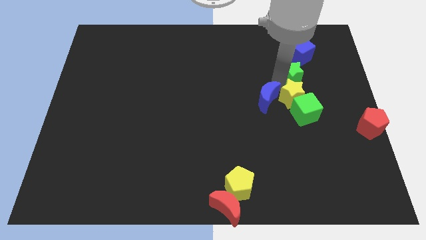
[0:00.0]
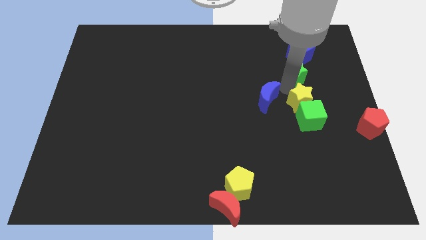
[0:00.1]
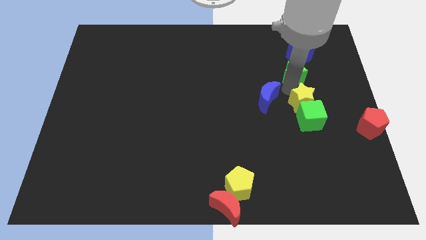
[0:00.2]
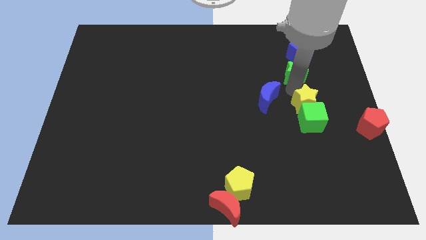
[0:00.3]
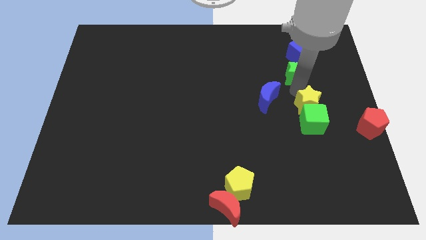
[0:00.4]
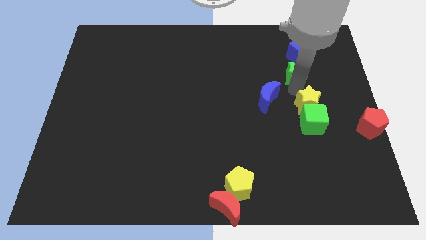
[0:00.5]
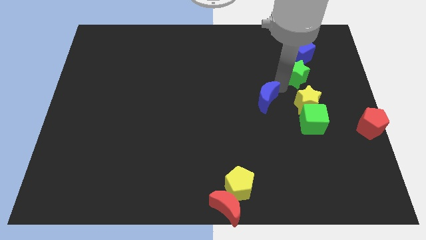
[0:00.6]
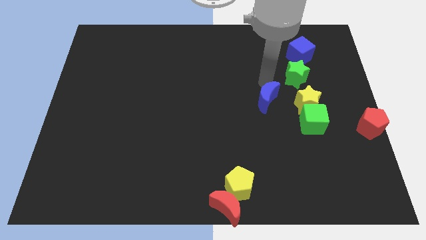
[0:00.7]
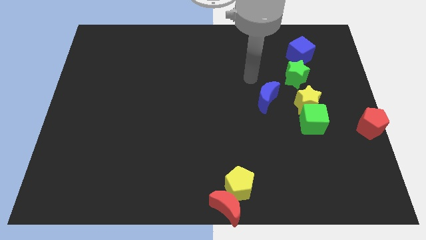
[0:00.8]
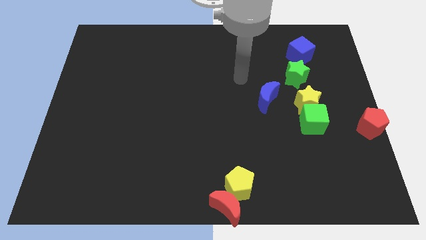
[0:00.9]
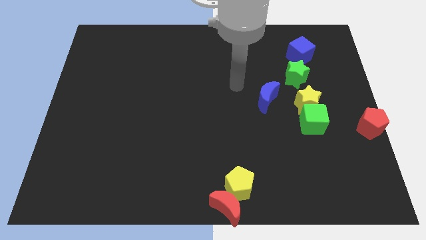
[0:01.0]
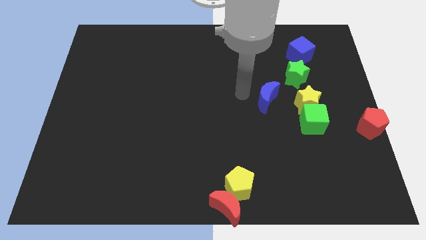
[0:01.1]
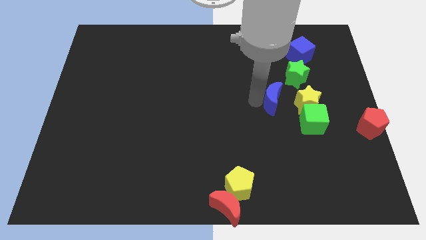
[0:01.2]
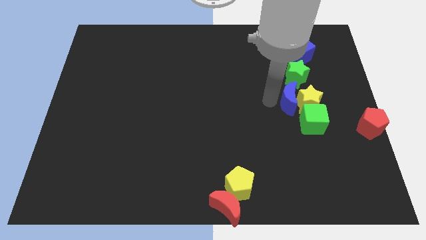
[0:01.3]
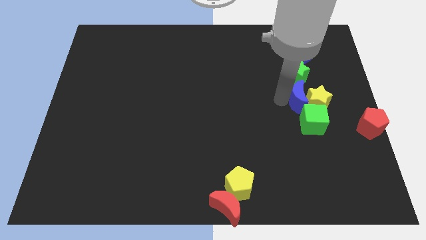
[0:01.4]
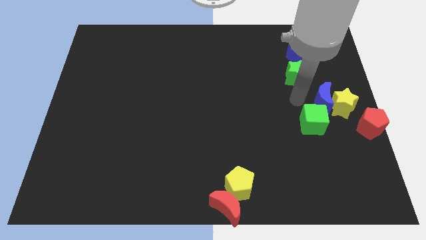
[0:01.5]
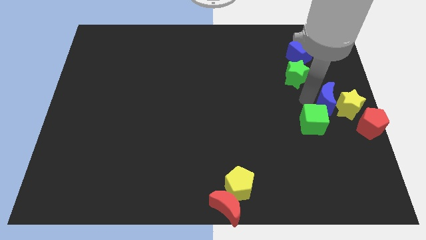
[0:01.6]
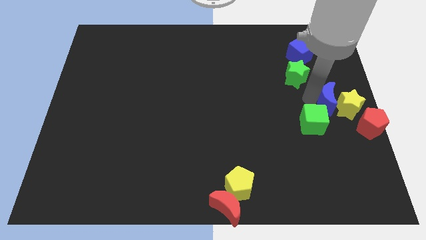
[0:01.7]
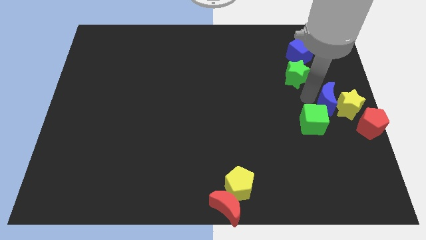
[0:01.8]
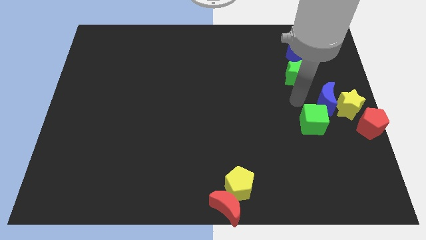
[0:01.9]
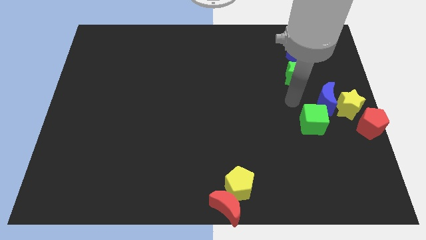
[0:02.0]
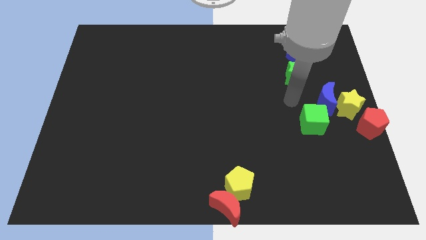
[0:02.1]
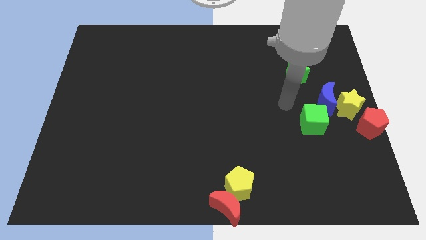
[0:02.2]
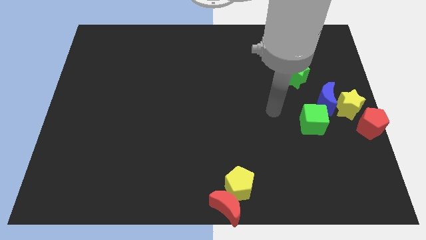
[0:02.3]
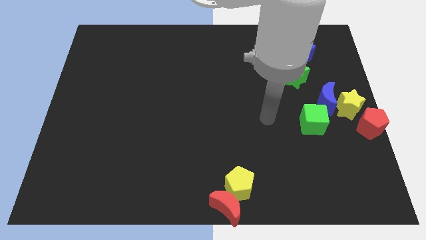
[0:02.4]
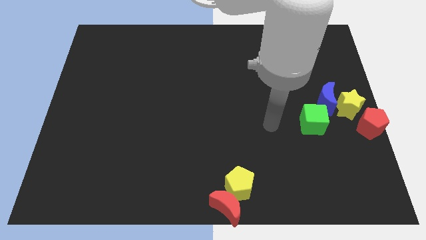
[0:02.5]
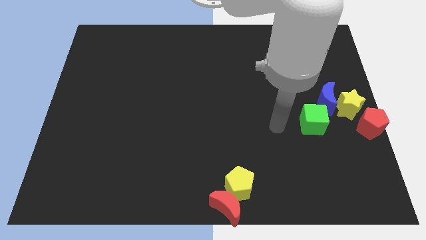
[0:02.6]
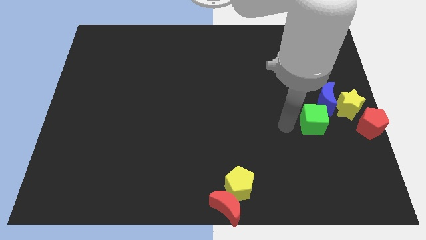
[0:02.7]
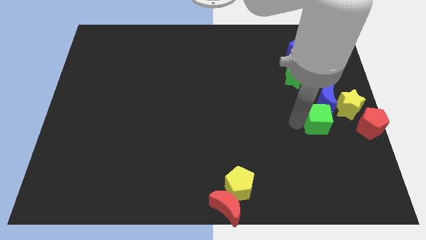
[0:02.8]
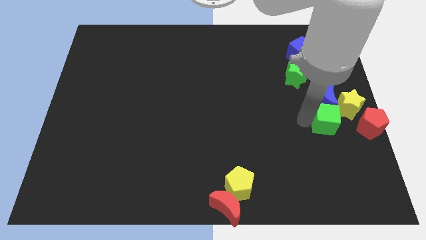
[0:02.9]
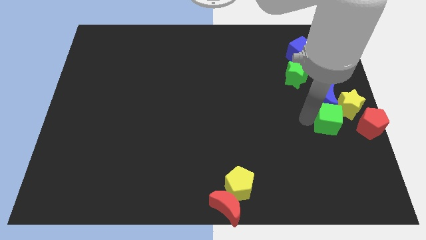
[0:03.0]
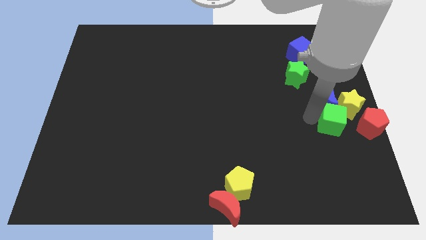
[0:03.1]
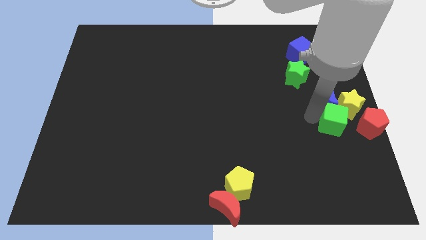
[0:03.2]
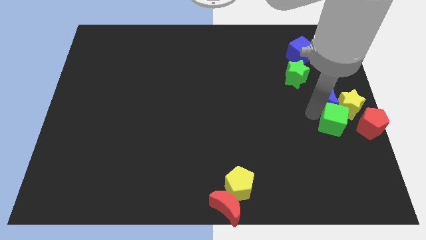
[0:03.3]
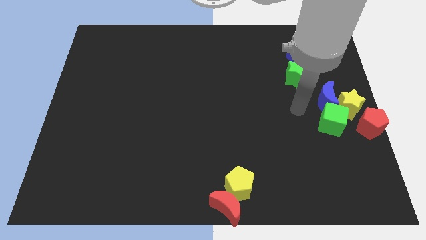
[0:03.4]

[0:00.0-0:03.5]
make a group of blocks out of yellow star blue crescent green cube and red pentagon at the center right of the board

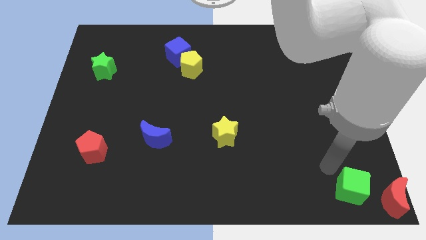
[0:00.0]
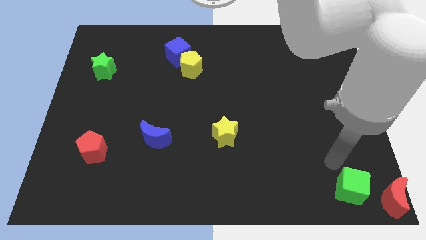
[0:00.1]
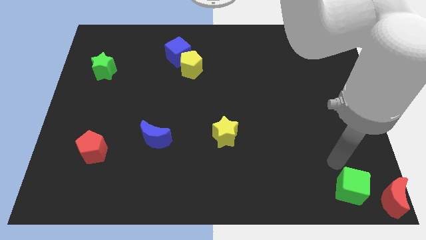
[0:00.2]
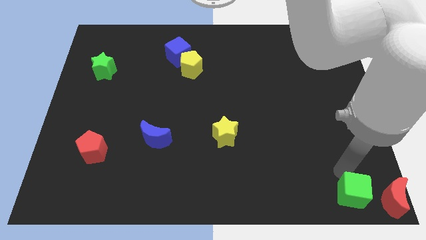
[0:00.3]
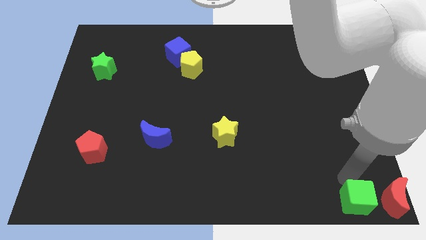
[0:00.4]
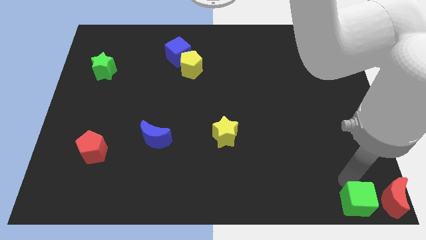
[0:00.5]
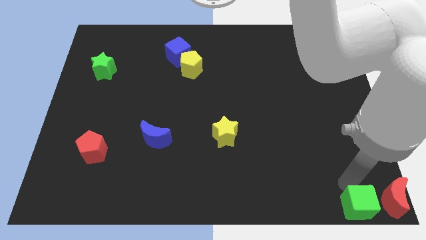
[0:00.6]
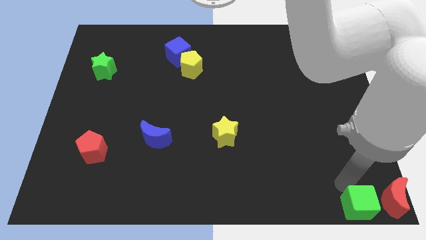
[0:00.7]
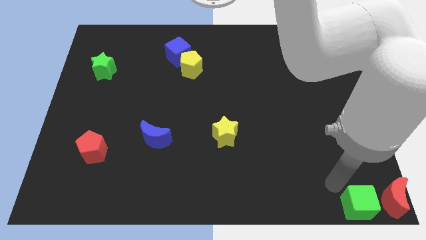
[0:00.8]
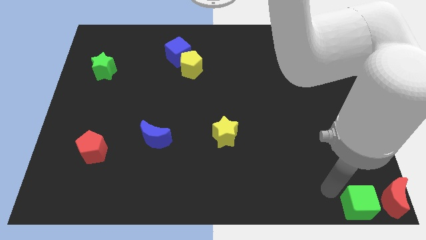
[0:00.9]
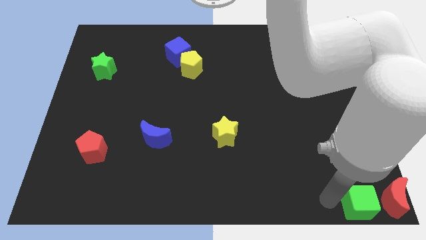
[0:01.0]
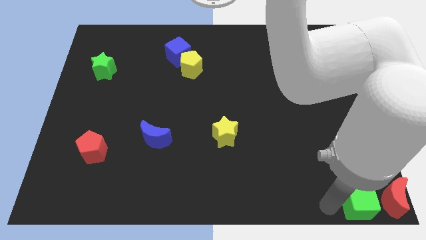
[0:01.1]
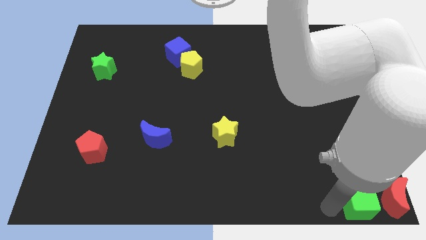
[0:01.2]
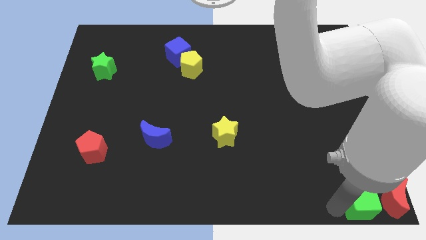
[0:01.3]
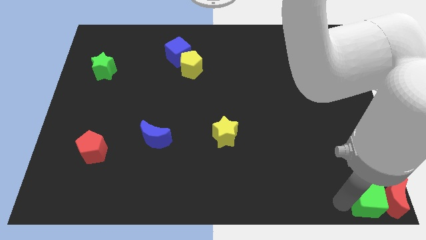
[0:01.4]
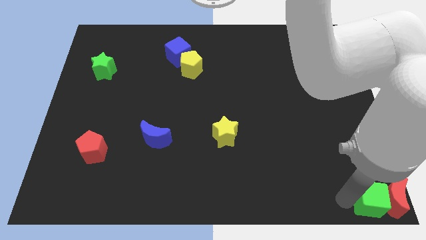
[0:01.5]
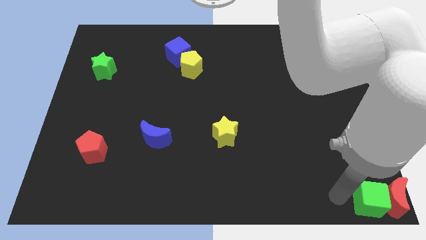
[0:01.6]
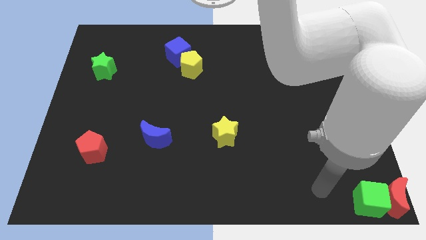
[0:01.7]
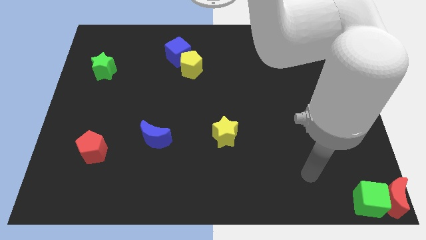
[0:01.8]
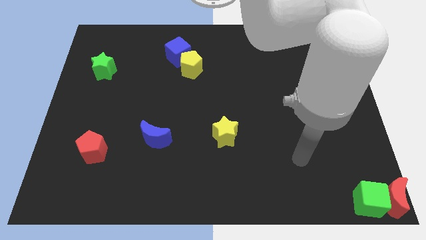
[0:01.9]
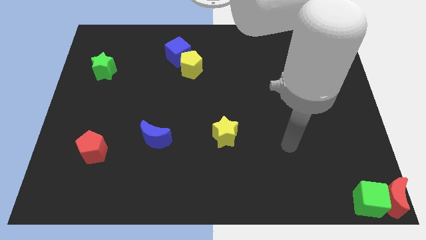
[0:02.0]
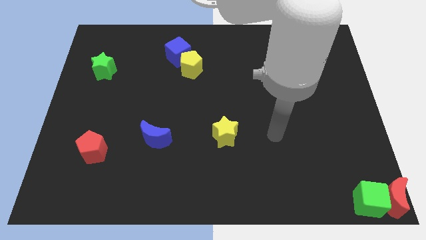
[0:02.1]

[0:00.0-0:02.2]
push the green cube into the red crescent

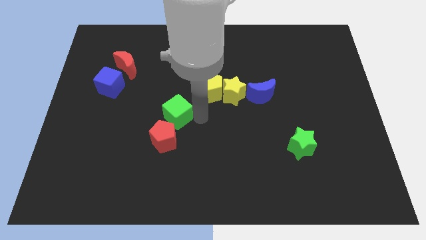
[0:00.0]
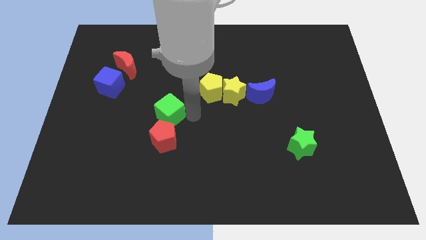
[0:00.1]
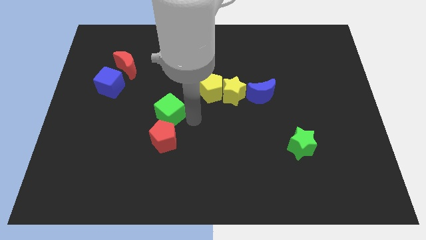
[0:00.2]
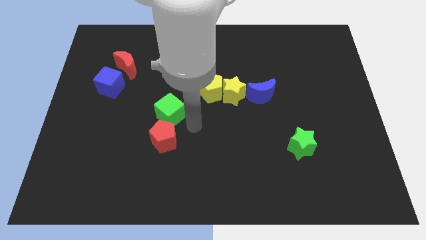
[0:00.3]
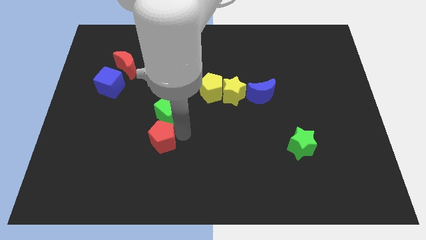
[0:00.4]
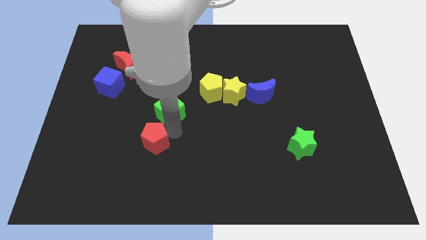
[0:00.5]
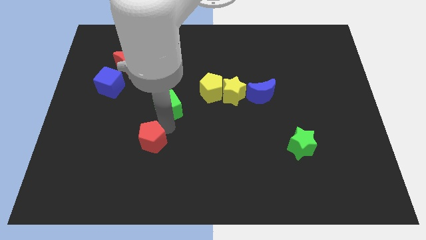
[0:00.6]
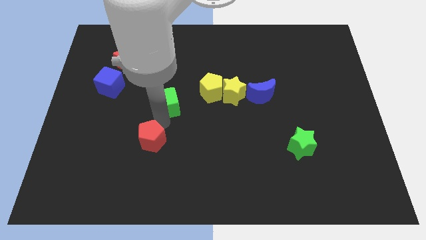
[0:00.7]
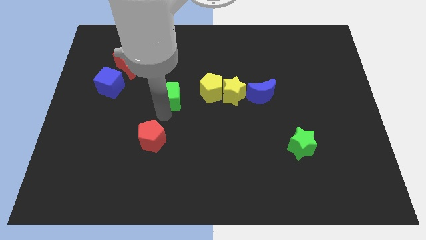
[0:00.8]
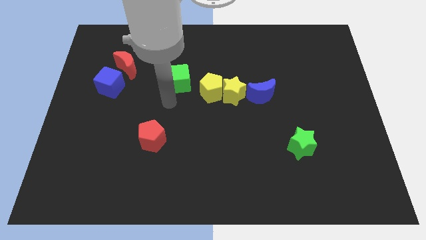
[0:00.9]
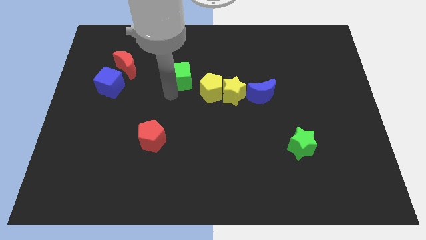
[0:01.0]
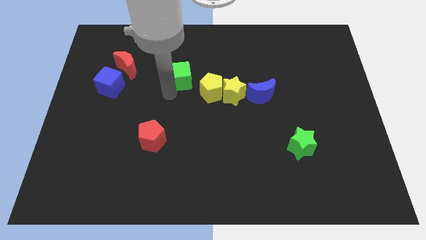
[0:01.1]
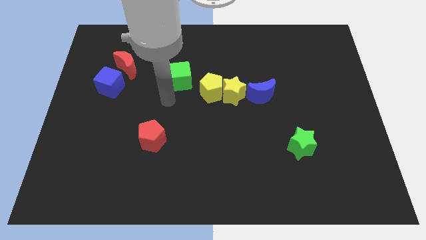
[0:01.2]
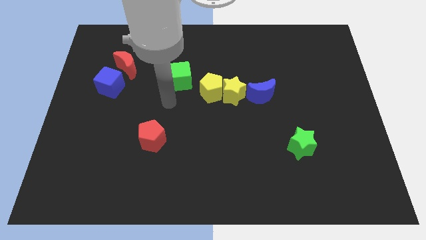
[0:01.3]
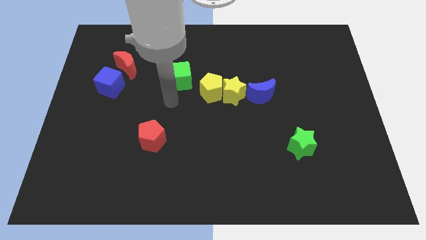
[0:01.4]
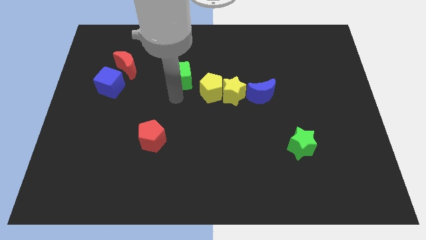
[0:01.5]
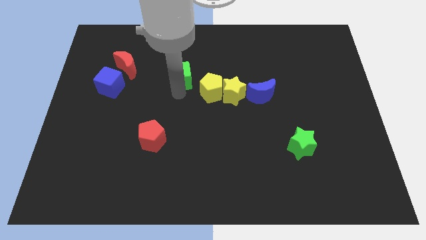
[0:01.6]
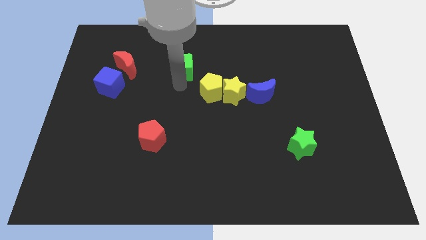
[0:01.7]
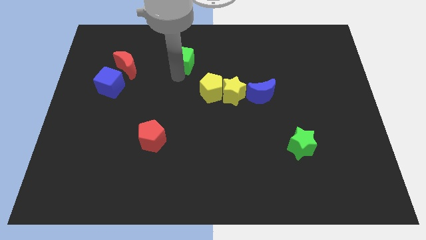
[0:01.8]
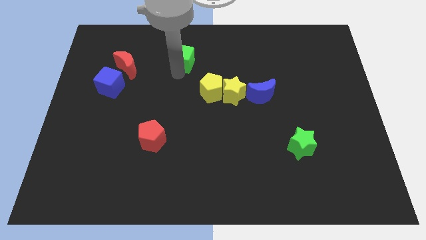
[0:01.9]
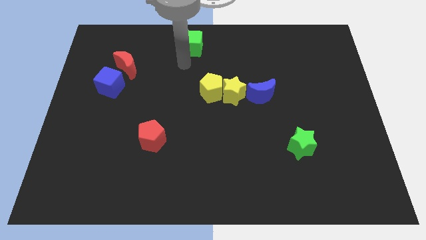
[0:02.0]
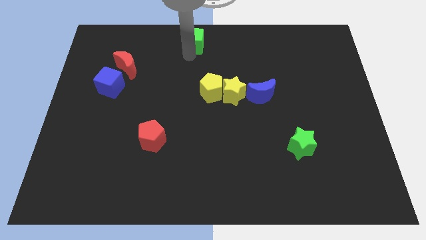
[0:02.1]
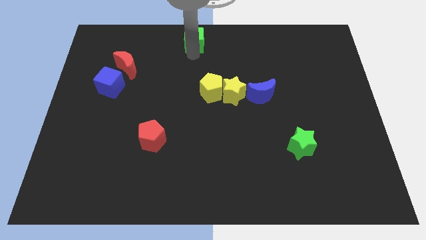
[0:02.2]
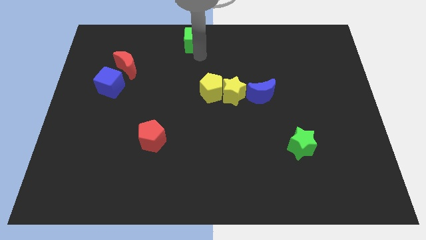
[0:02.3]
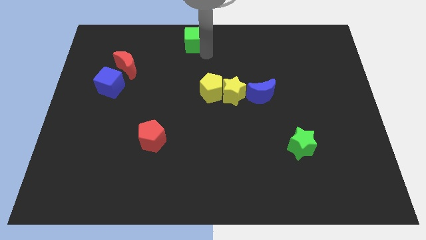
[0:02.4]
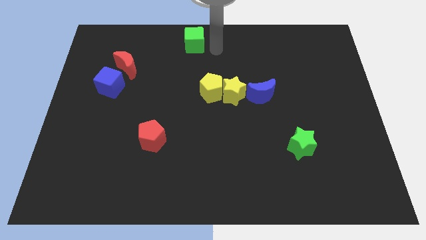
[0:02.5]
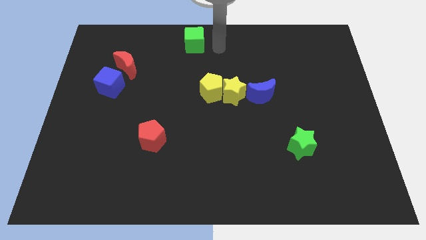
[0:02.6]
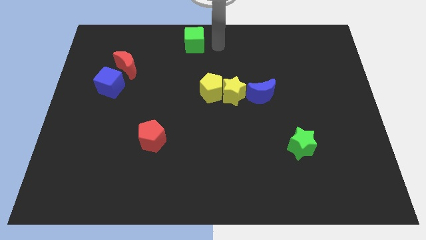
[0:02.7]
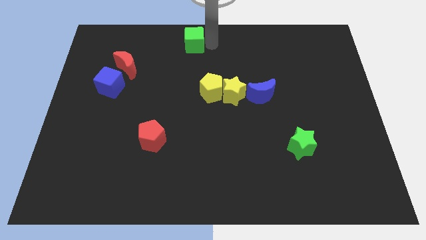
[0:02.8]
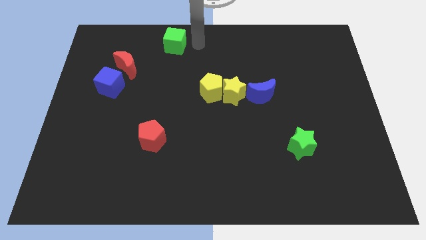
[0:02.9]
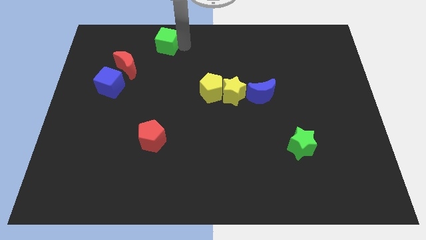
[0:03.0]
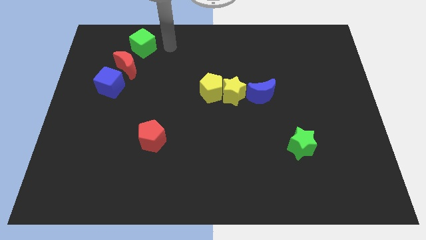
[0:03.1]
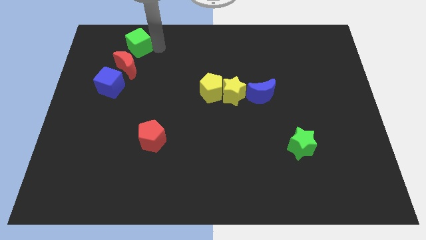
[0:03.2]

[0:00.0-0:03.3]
move the green cube diagonal to the red moon
